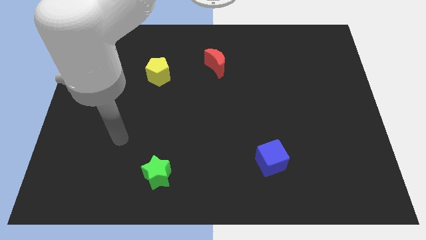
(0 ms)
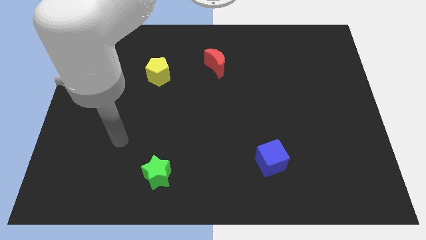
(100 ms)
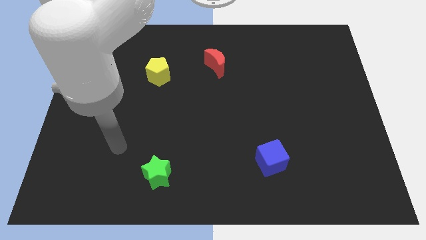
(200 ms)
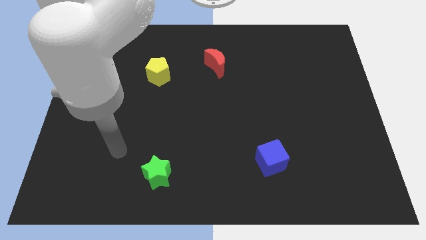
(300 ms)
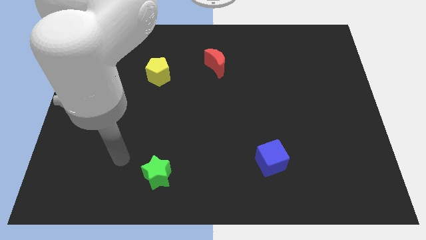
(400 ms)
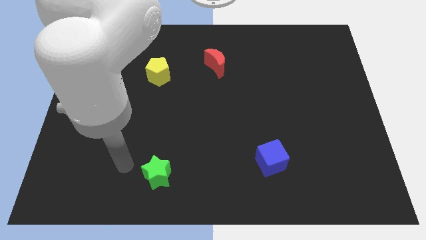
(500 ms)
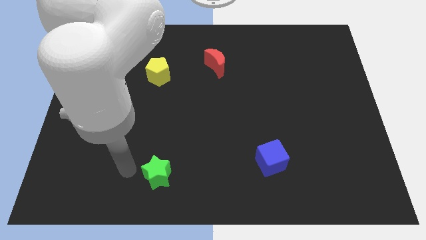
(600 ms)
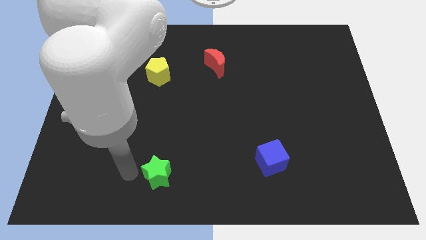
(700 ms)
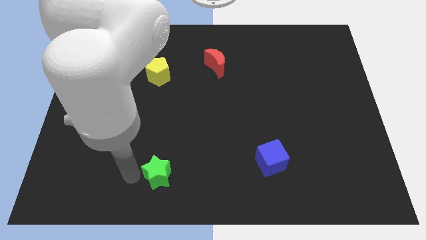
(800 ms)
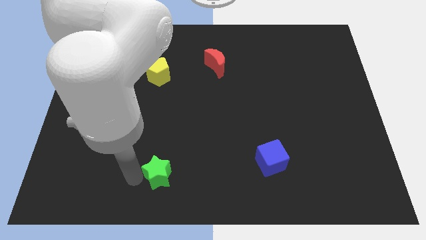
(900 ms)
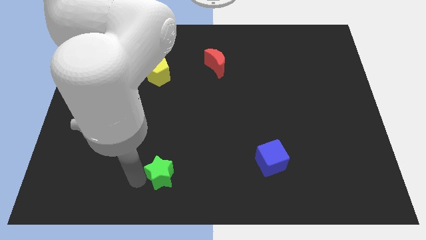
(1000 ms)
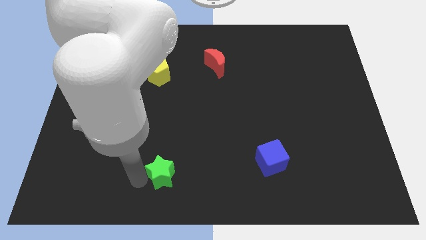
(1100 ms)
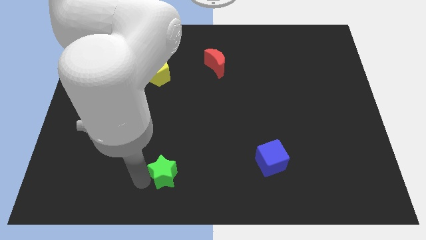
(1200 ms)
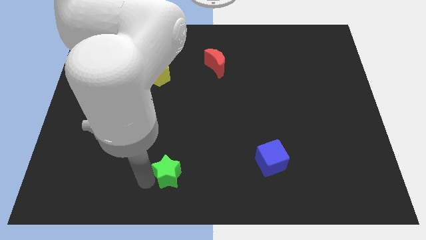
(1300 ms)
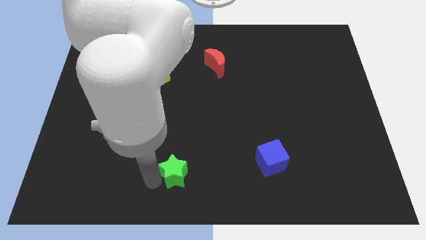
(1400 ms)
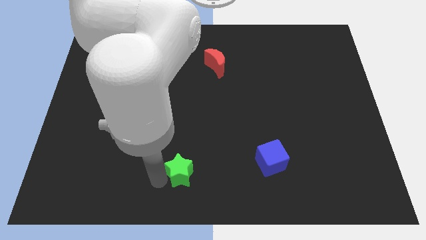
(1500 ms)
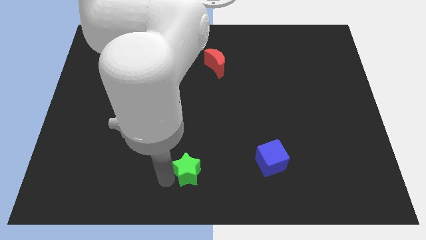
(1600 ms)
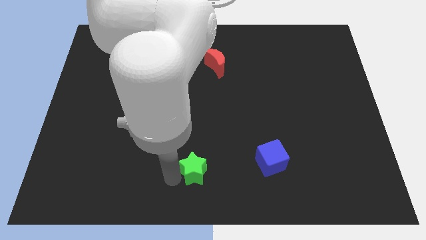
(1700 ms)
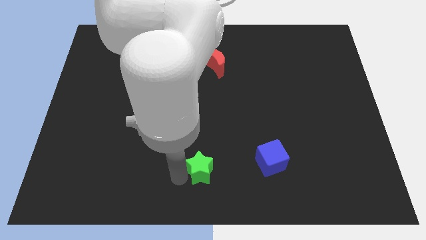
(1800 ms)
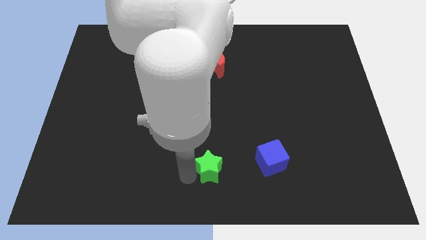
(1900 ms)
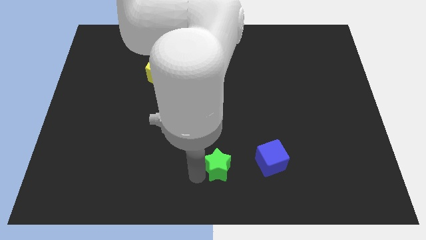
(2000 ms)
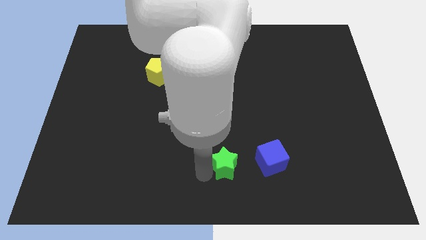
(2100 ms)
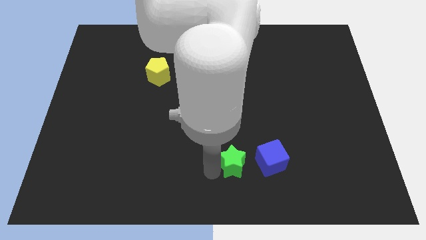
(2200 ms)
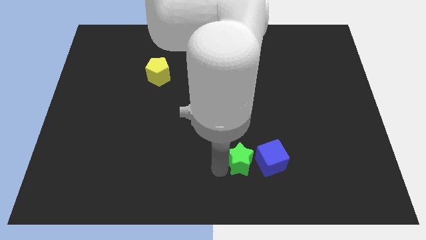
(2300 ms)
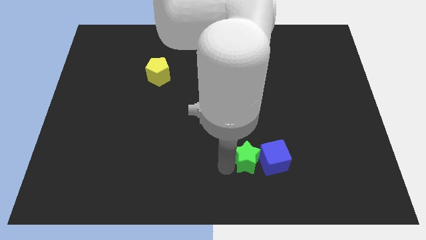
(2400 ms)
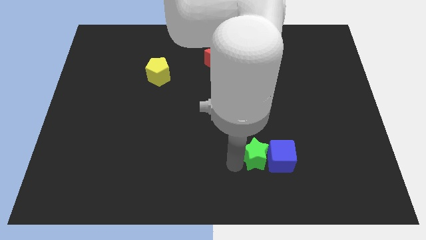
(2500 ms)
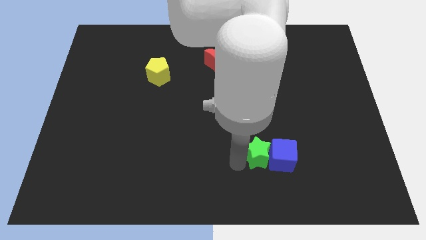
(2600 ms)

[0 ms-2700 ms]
slide the star close to the cube

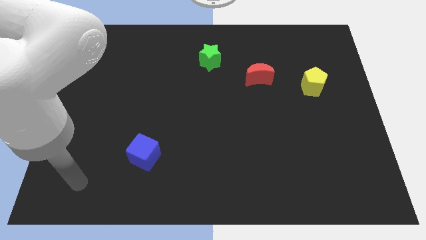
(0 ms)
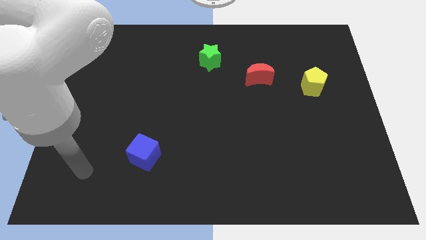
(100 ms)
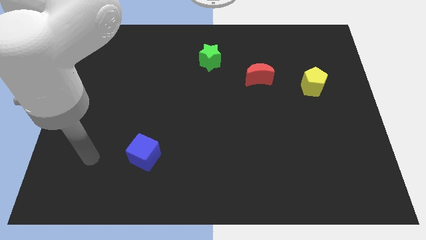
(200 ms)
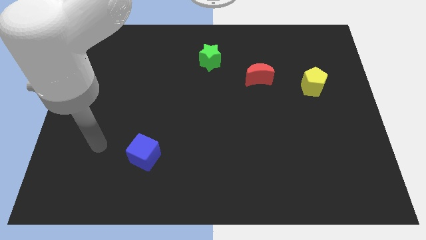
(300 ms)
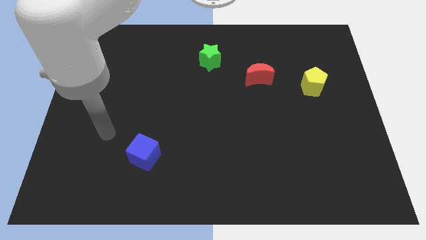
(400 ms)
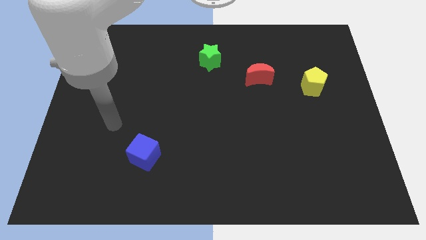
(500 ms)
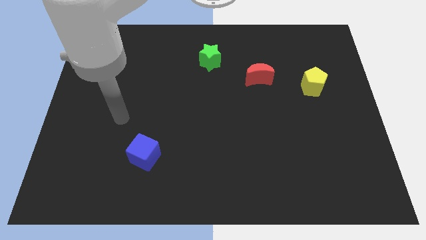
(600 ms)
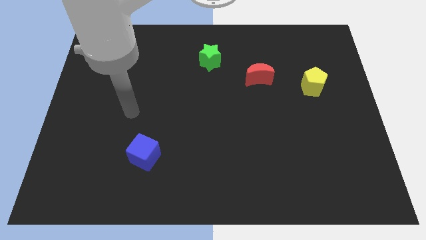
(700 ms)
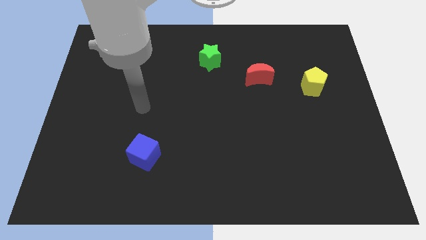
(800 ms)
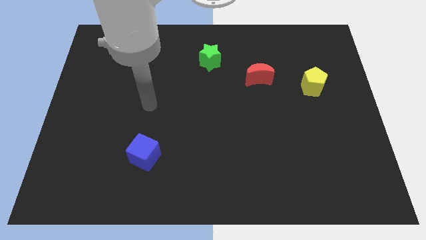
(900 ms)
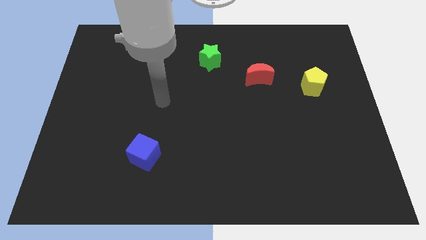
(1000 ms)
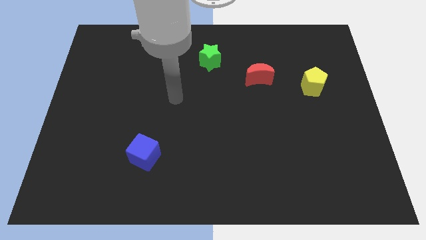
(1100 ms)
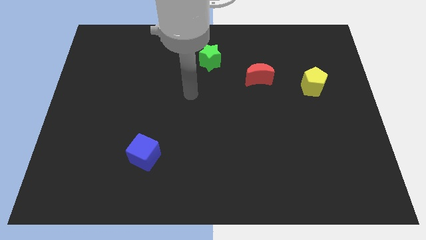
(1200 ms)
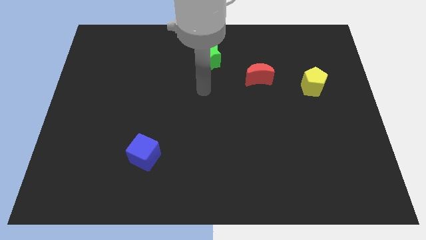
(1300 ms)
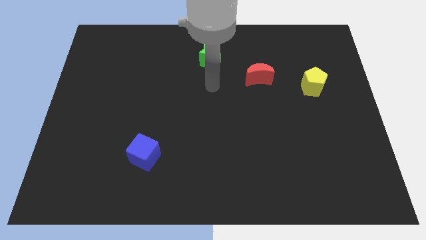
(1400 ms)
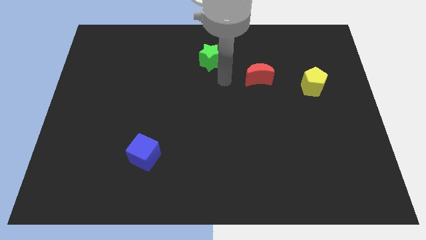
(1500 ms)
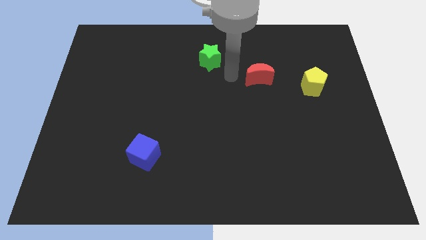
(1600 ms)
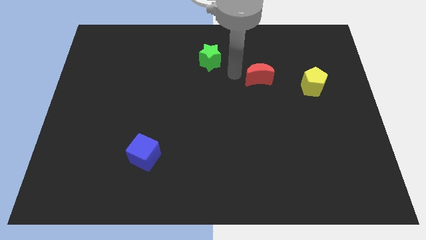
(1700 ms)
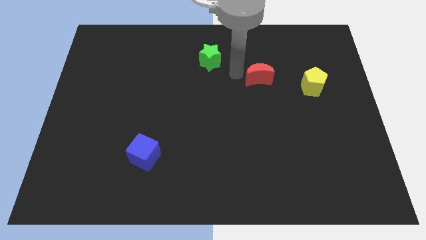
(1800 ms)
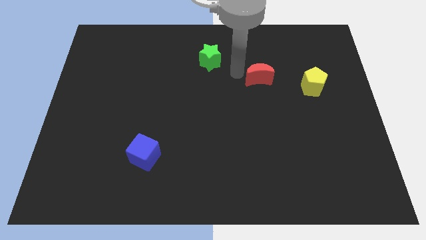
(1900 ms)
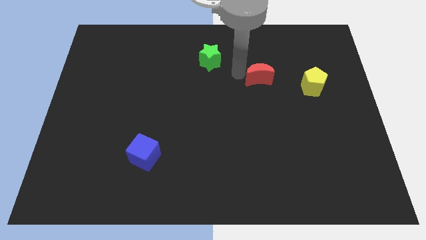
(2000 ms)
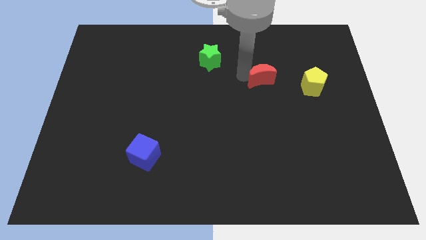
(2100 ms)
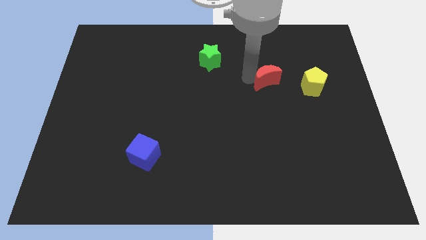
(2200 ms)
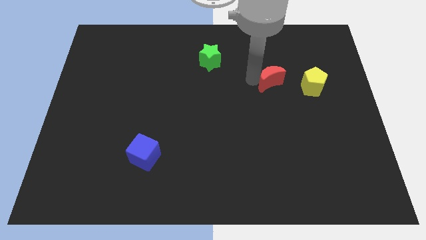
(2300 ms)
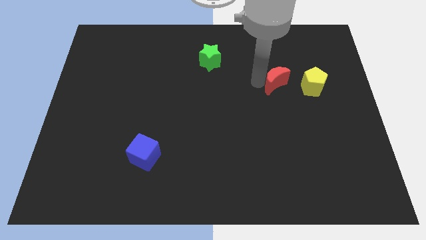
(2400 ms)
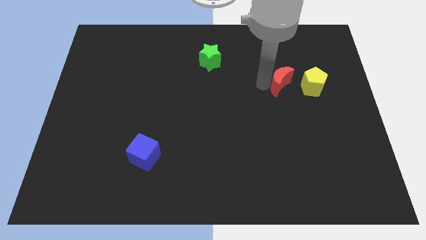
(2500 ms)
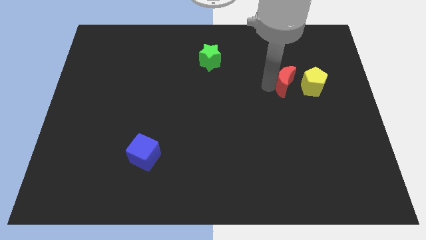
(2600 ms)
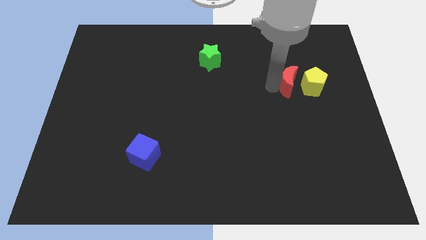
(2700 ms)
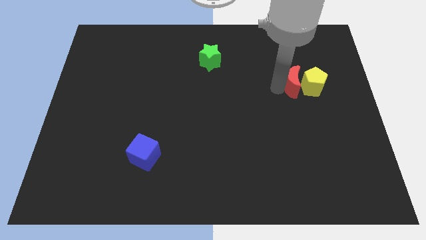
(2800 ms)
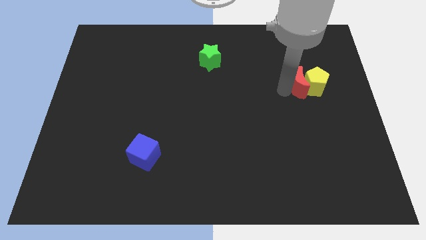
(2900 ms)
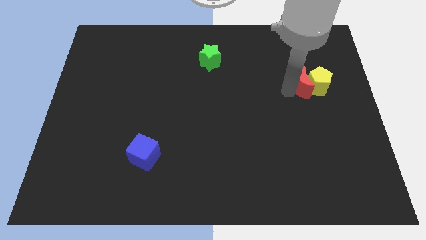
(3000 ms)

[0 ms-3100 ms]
put the moon next to the pentagon

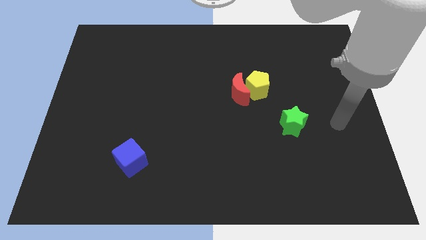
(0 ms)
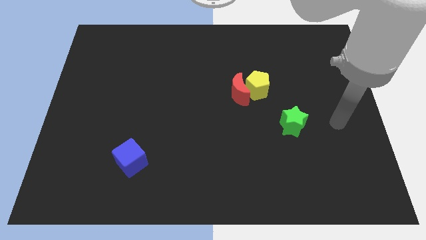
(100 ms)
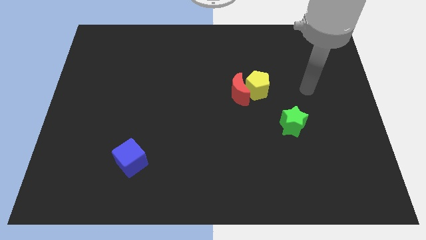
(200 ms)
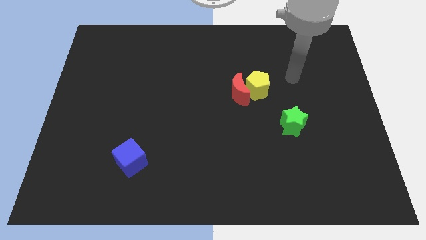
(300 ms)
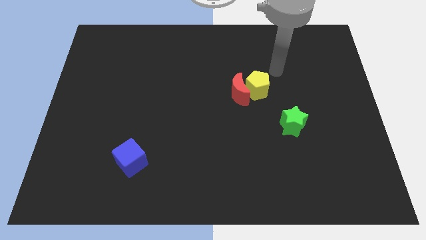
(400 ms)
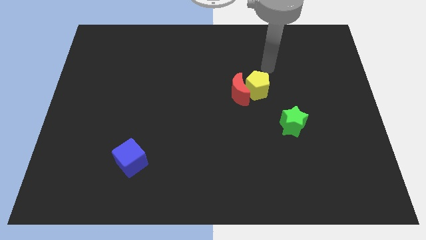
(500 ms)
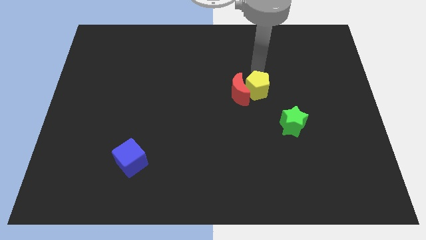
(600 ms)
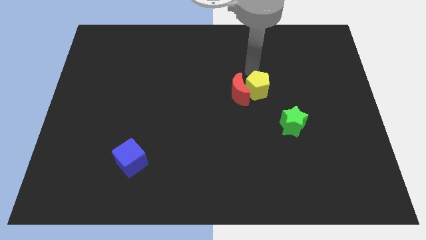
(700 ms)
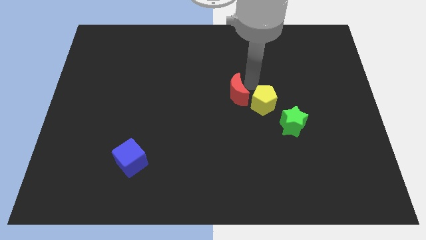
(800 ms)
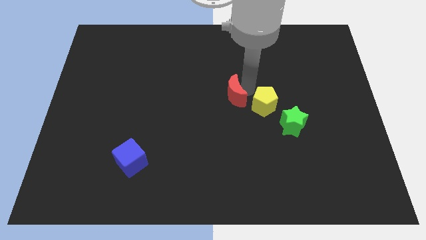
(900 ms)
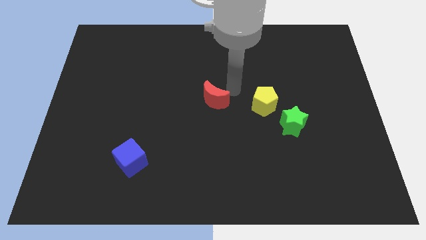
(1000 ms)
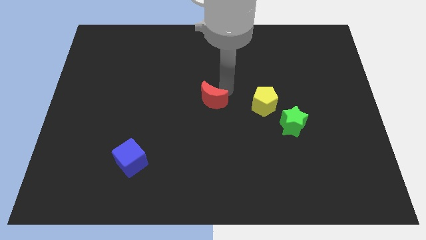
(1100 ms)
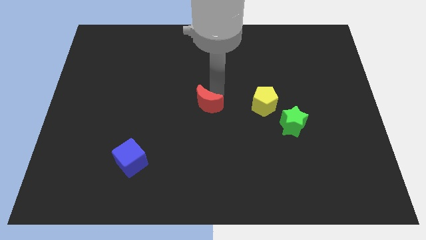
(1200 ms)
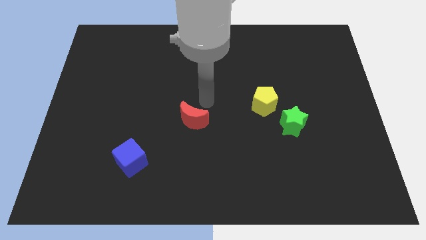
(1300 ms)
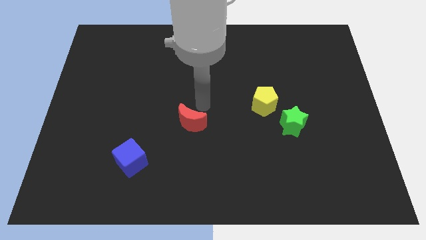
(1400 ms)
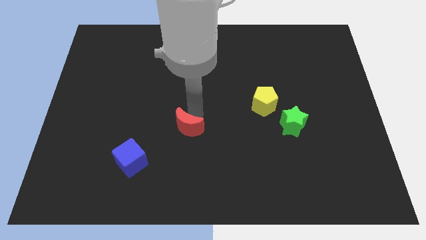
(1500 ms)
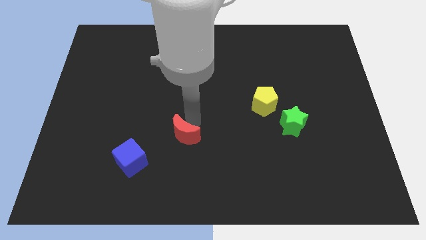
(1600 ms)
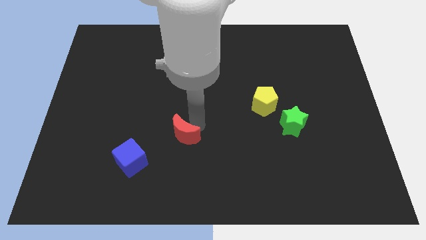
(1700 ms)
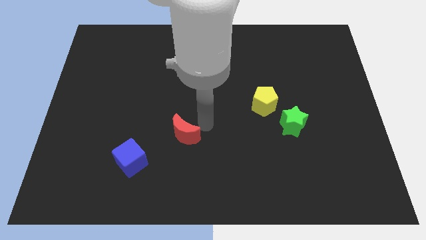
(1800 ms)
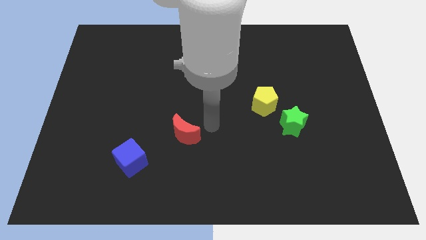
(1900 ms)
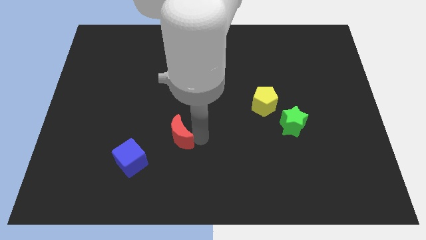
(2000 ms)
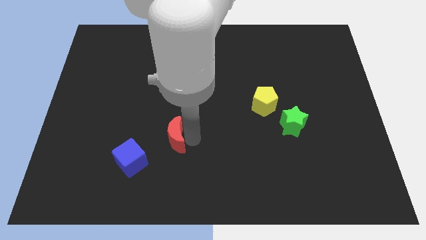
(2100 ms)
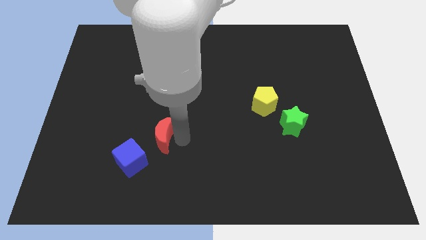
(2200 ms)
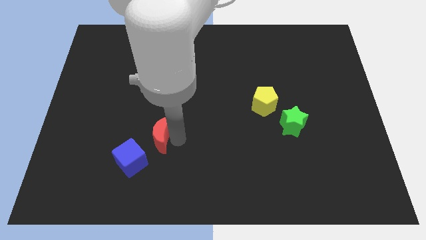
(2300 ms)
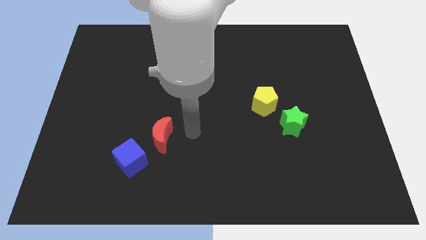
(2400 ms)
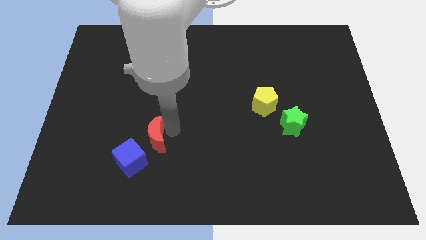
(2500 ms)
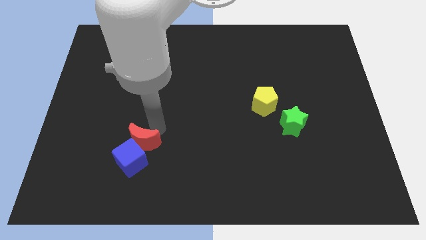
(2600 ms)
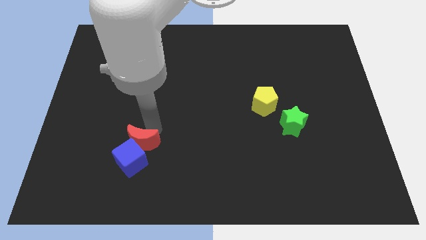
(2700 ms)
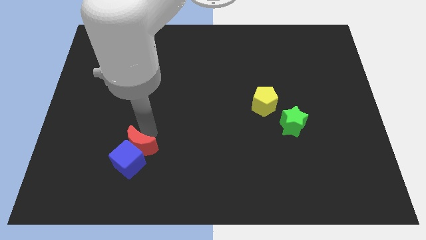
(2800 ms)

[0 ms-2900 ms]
slide the moon next to the blue block
